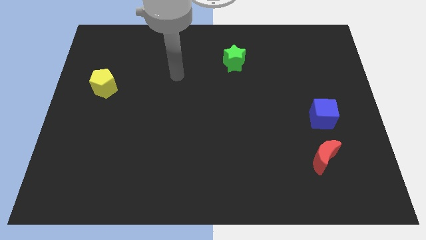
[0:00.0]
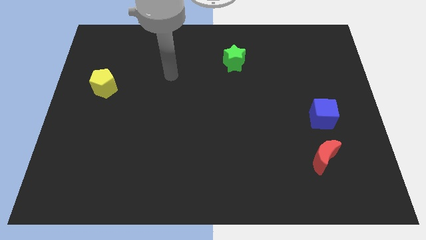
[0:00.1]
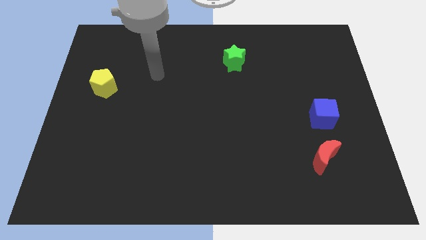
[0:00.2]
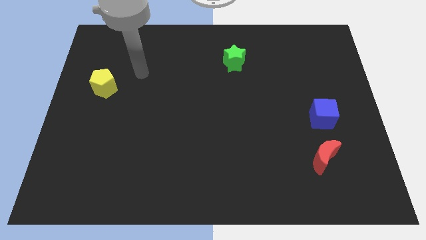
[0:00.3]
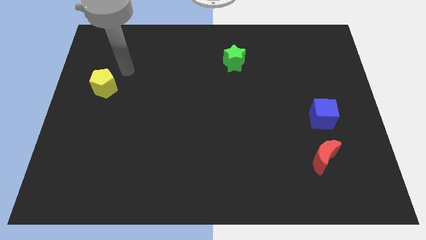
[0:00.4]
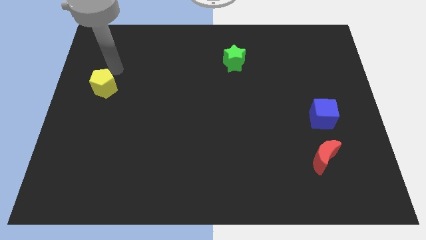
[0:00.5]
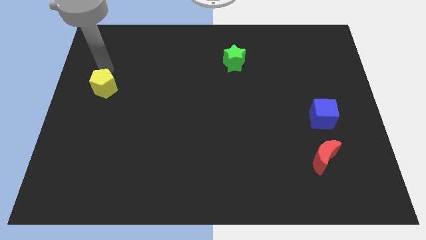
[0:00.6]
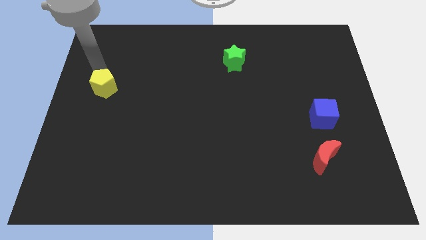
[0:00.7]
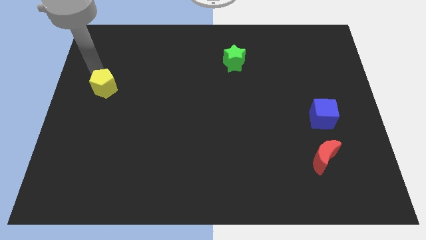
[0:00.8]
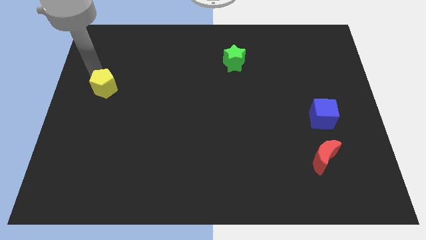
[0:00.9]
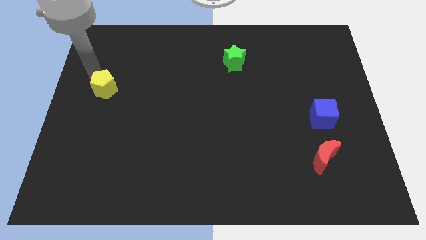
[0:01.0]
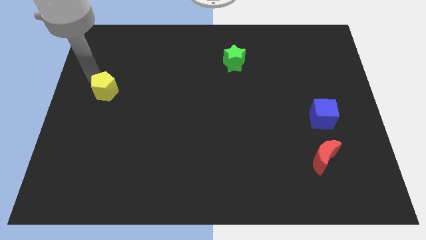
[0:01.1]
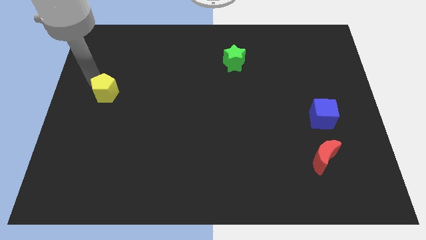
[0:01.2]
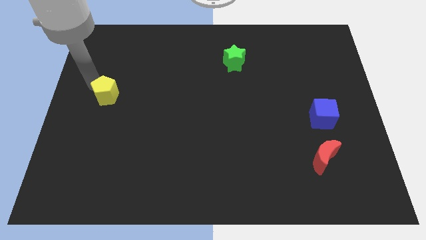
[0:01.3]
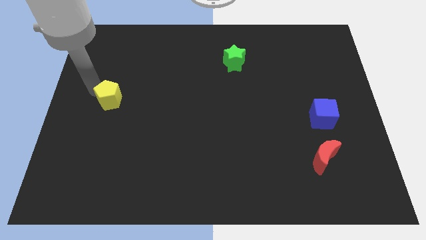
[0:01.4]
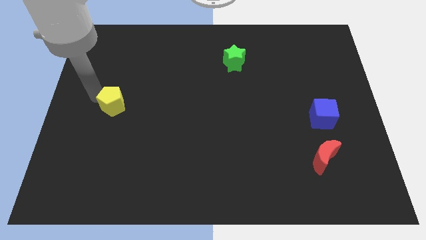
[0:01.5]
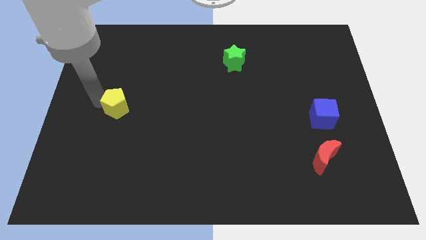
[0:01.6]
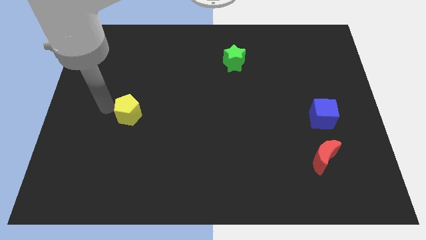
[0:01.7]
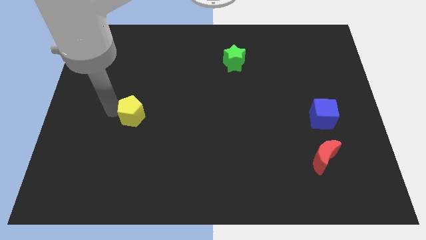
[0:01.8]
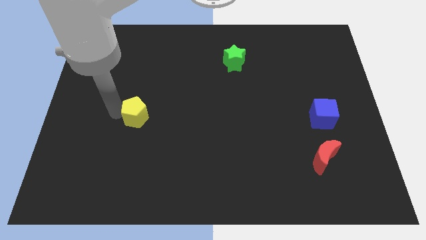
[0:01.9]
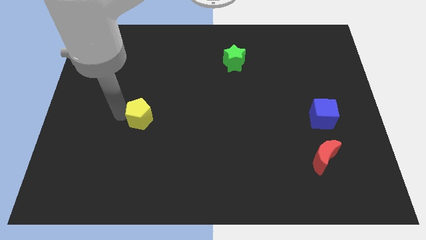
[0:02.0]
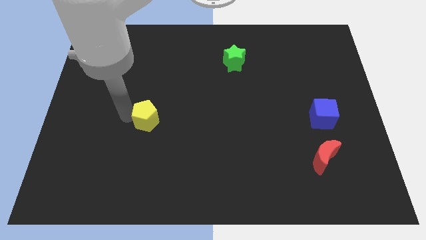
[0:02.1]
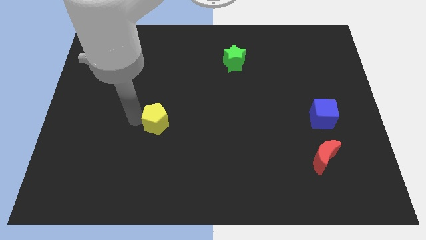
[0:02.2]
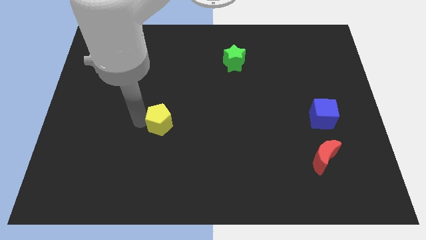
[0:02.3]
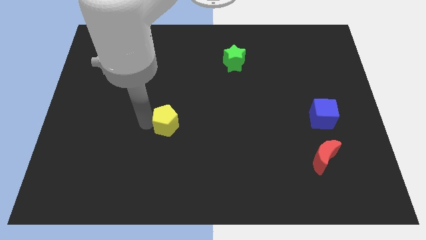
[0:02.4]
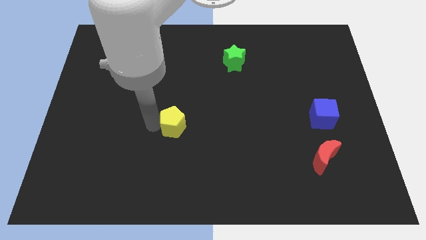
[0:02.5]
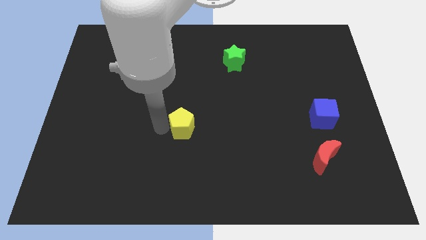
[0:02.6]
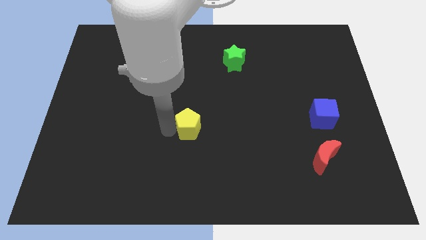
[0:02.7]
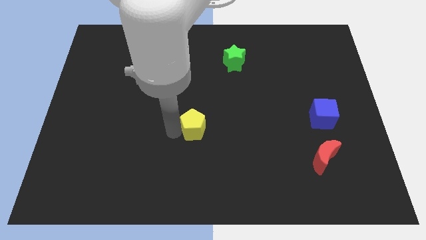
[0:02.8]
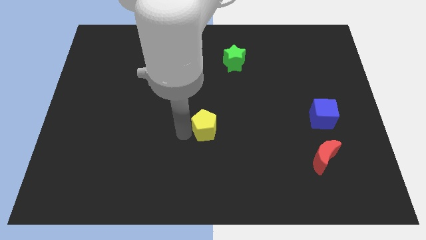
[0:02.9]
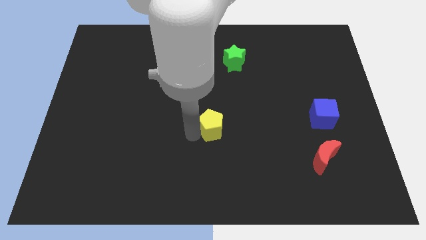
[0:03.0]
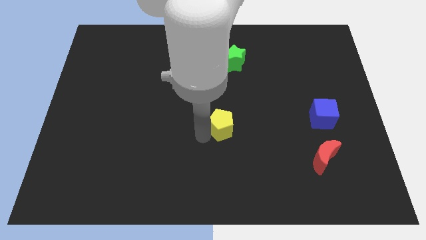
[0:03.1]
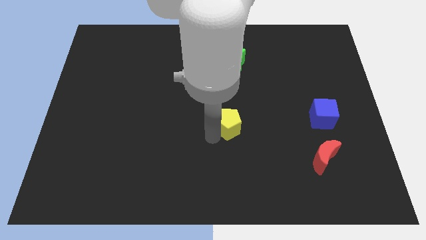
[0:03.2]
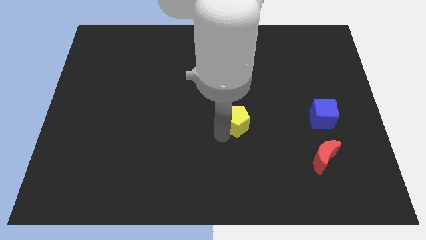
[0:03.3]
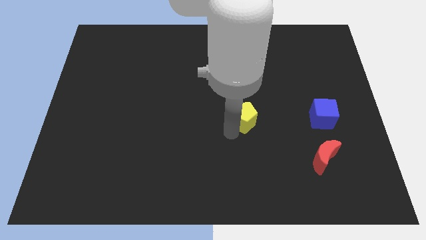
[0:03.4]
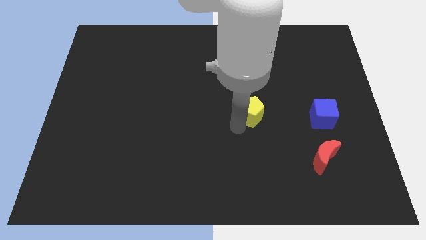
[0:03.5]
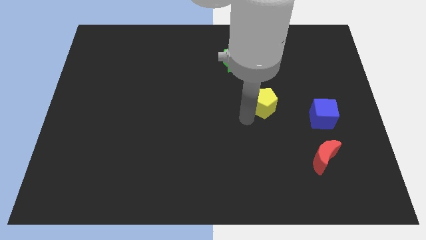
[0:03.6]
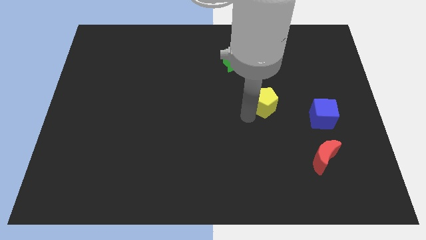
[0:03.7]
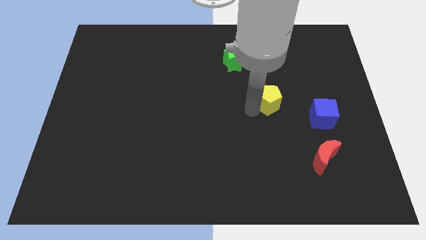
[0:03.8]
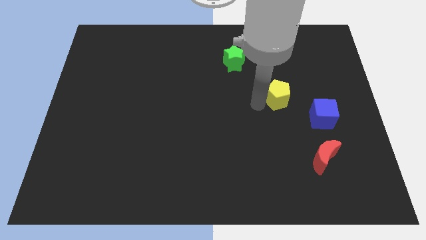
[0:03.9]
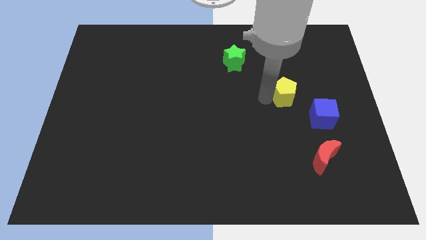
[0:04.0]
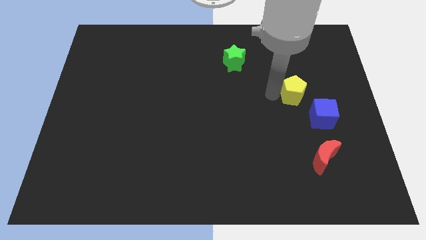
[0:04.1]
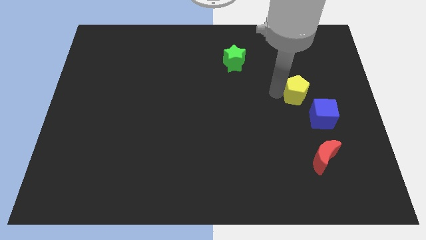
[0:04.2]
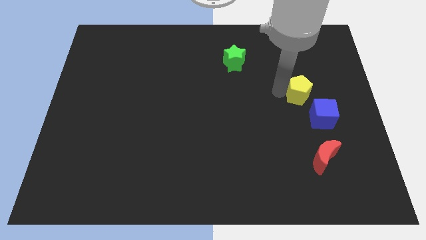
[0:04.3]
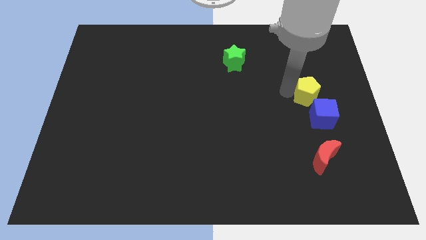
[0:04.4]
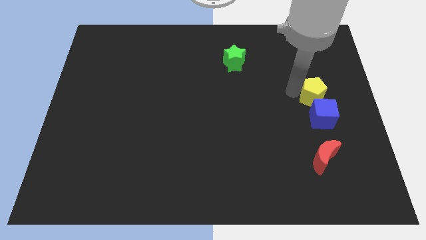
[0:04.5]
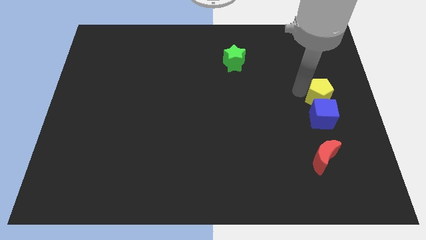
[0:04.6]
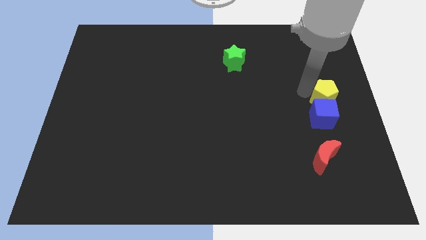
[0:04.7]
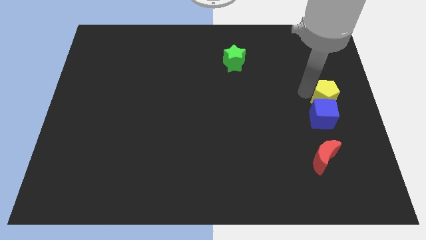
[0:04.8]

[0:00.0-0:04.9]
push the yellow block to the blue block

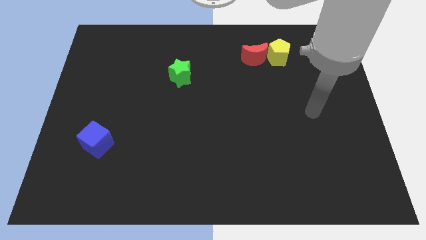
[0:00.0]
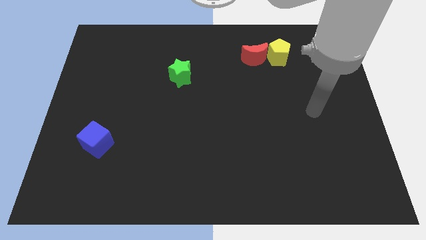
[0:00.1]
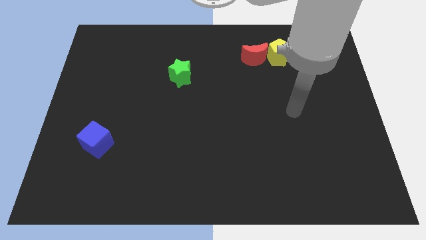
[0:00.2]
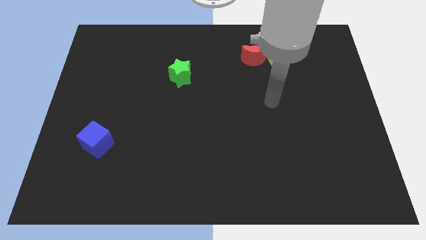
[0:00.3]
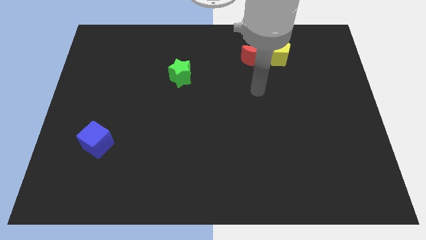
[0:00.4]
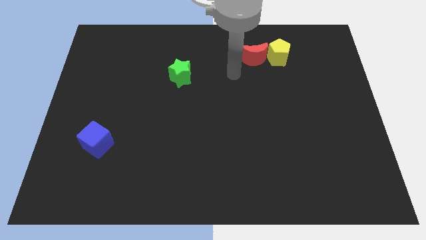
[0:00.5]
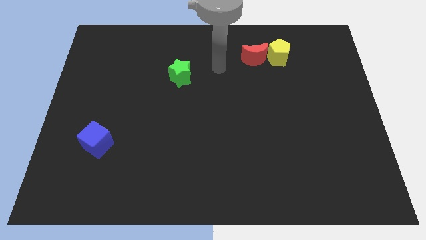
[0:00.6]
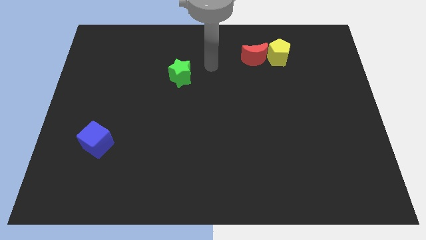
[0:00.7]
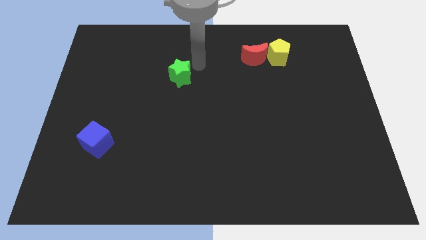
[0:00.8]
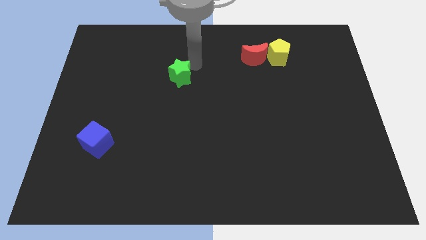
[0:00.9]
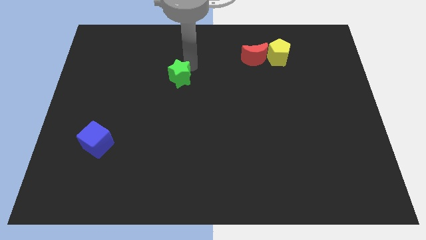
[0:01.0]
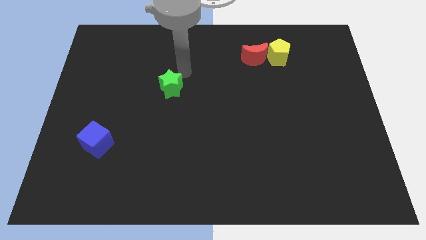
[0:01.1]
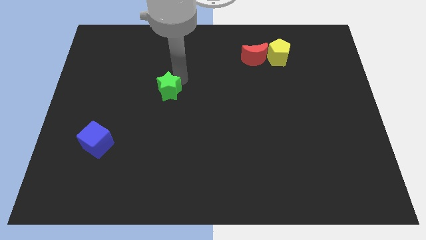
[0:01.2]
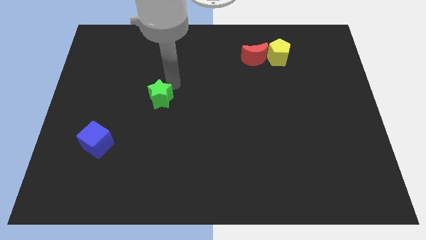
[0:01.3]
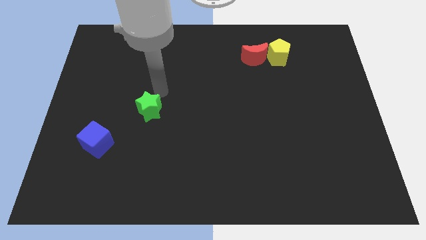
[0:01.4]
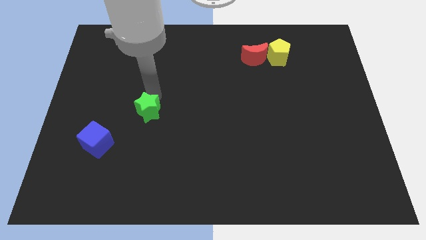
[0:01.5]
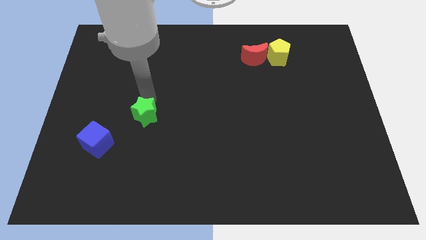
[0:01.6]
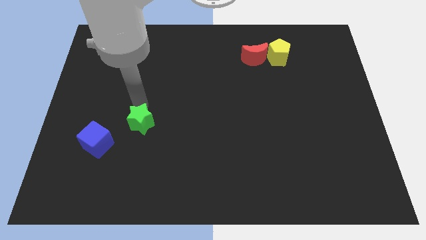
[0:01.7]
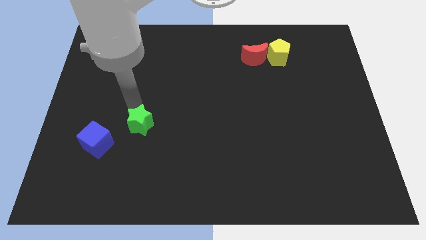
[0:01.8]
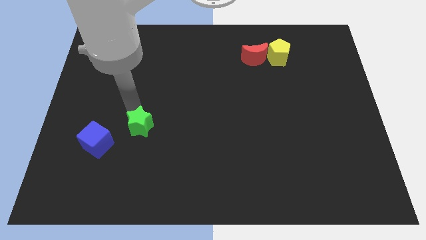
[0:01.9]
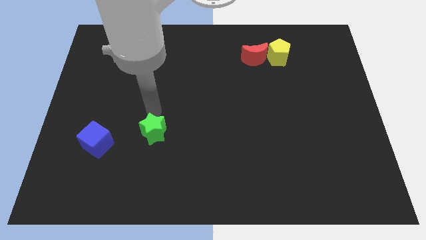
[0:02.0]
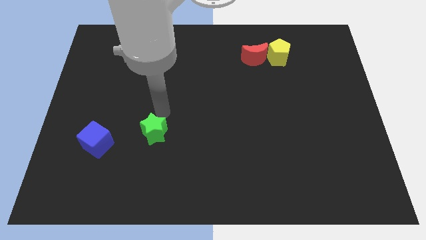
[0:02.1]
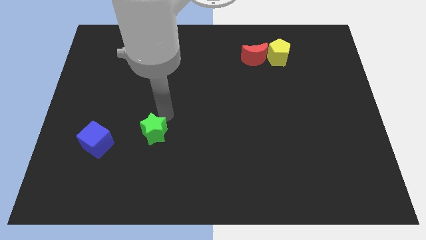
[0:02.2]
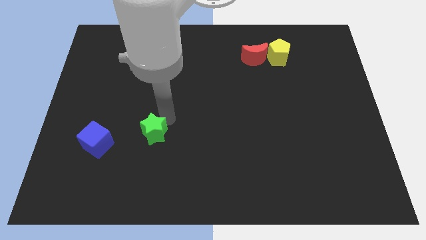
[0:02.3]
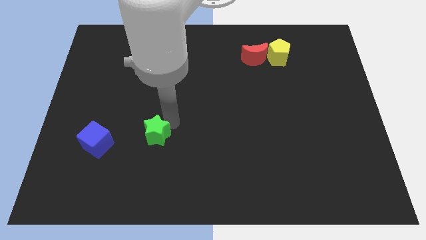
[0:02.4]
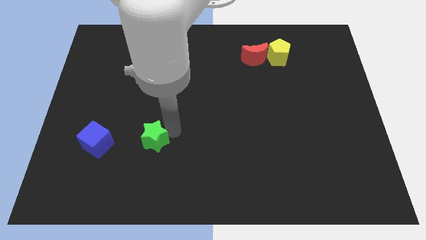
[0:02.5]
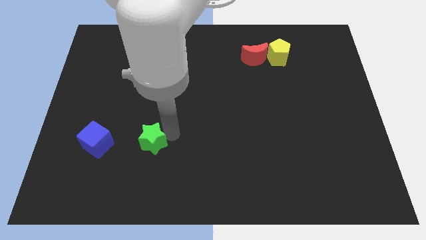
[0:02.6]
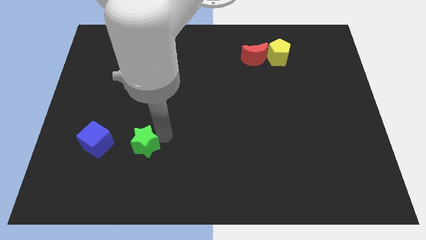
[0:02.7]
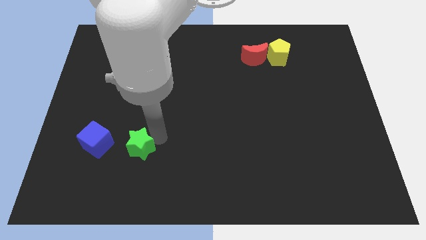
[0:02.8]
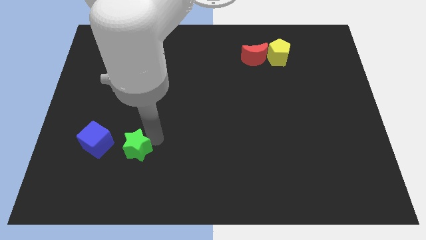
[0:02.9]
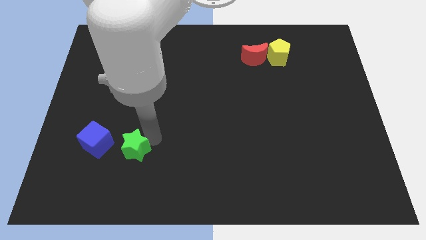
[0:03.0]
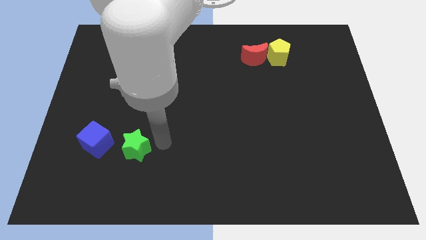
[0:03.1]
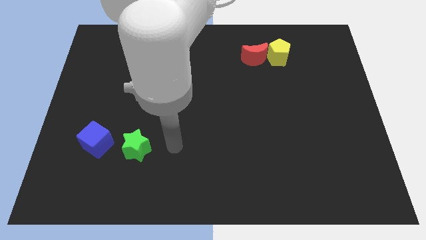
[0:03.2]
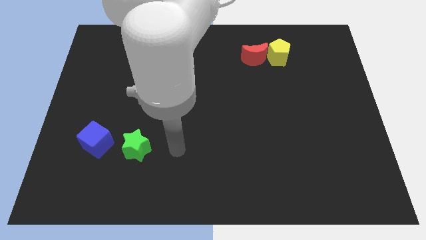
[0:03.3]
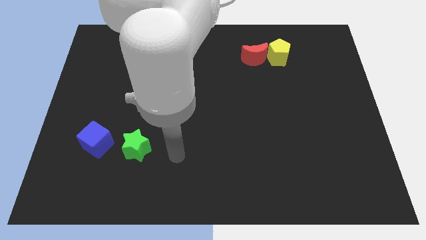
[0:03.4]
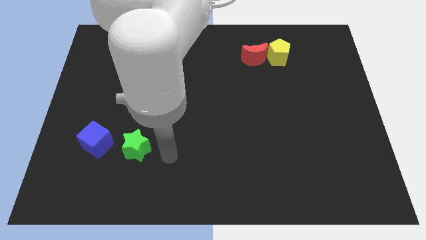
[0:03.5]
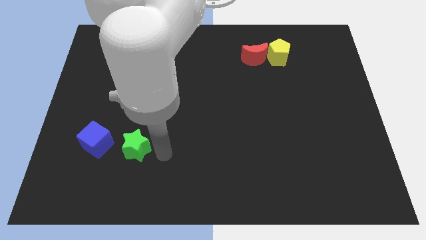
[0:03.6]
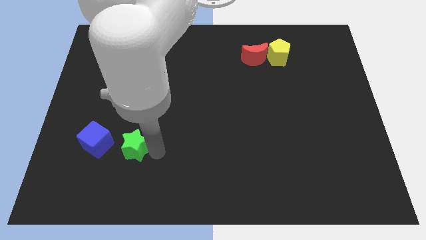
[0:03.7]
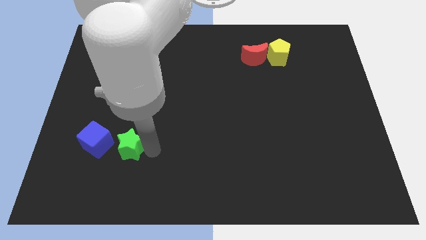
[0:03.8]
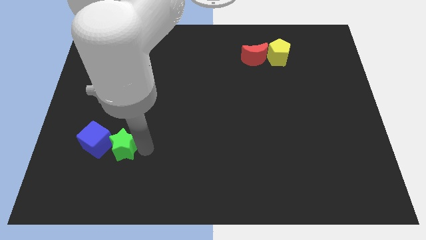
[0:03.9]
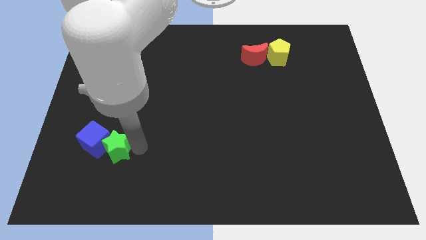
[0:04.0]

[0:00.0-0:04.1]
move the star next to the cube
